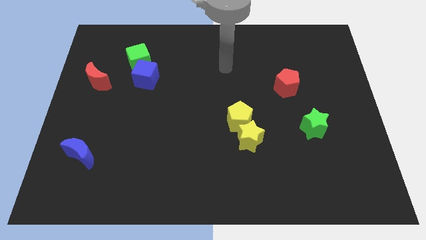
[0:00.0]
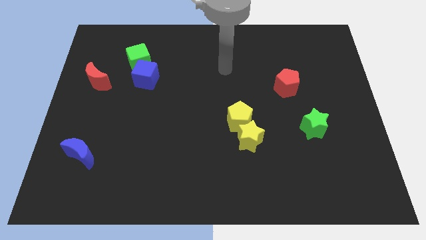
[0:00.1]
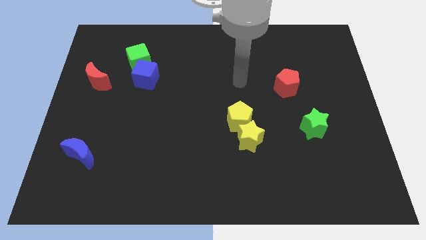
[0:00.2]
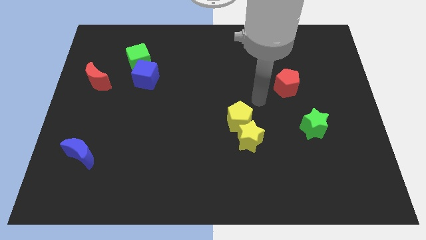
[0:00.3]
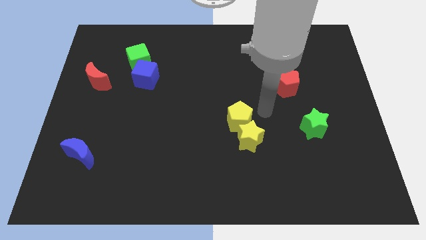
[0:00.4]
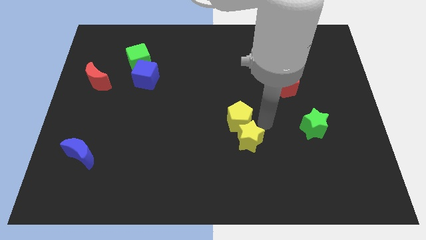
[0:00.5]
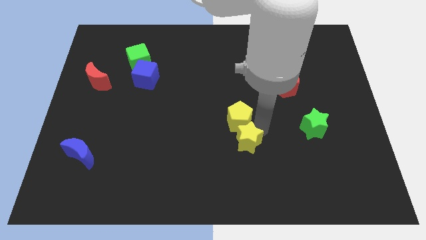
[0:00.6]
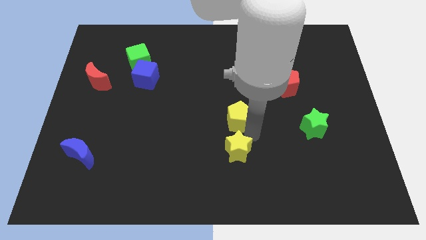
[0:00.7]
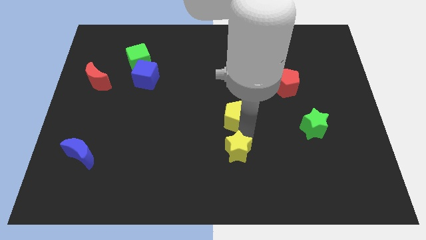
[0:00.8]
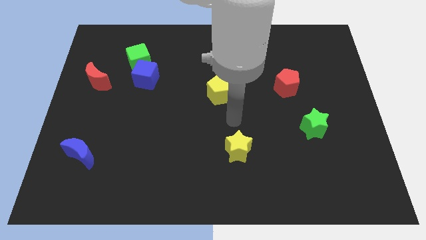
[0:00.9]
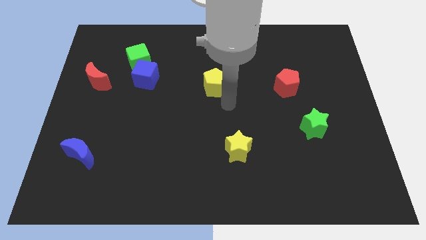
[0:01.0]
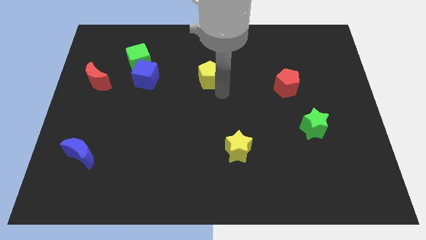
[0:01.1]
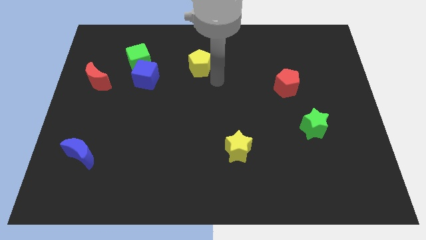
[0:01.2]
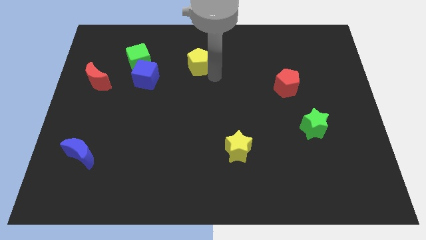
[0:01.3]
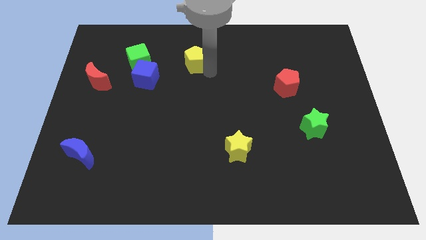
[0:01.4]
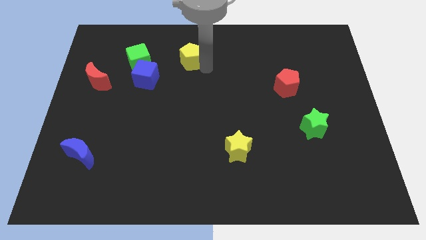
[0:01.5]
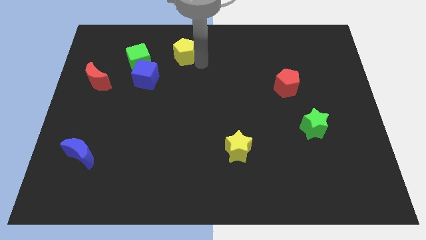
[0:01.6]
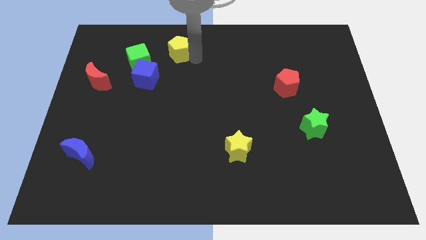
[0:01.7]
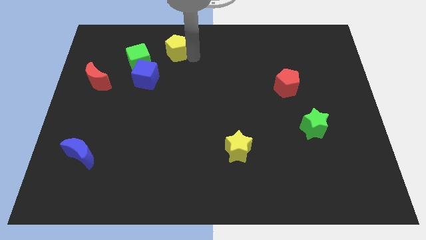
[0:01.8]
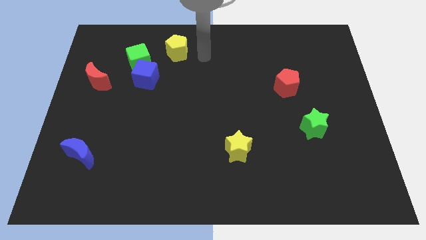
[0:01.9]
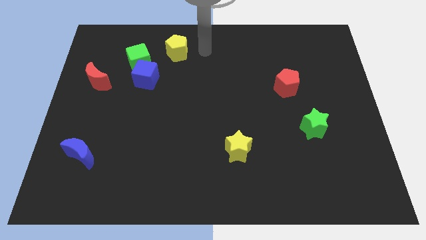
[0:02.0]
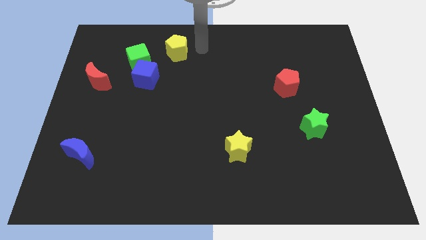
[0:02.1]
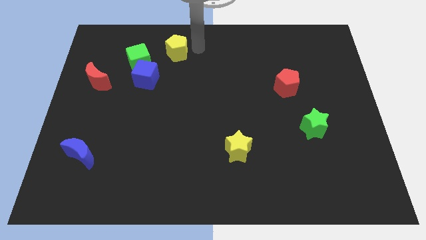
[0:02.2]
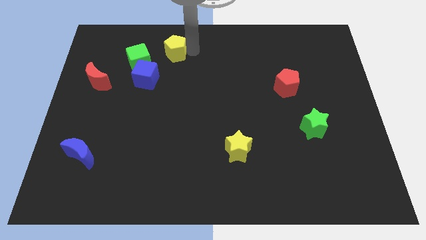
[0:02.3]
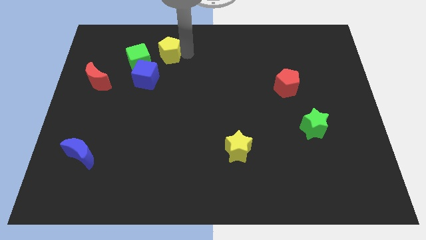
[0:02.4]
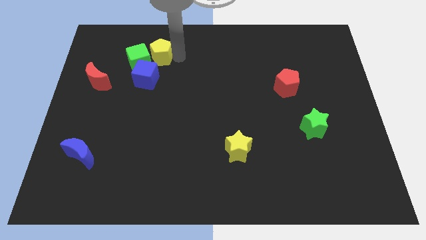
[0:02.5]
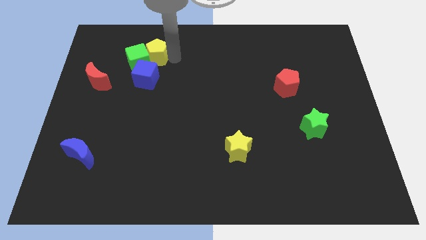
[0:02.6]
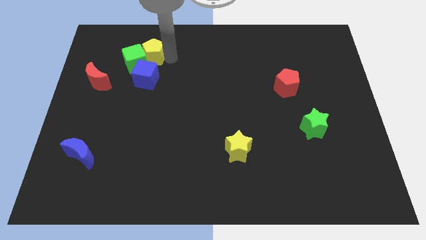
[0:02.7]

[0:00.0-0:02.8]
move the yellow pentagon to the green cube

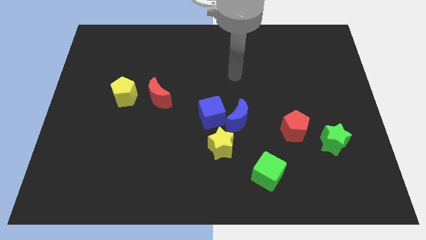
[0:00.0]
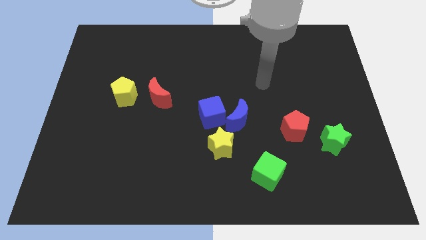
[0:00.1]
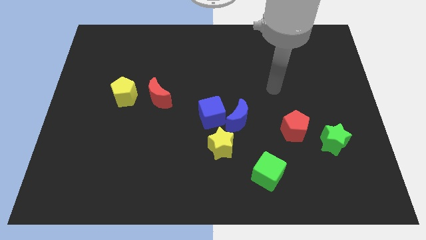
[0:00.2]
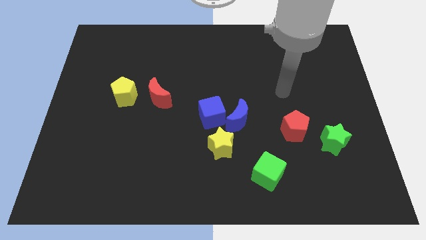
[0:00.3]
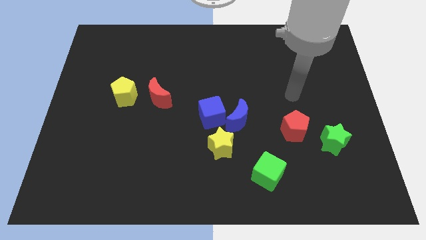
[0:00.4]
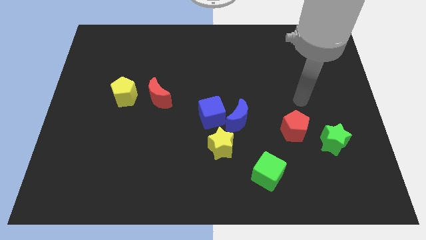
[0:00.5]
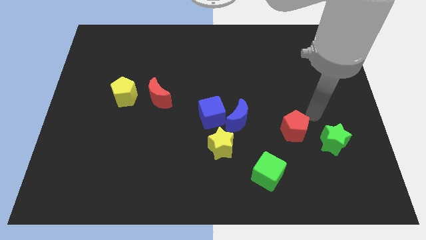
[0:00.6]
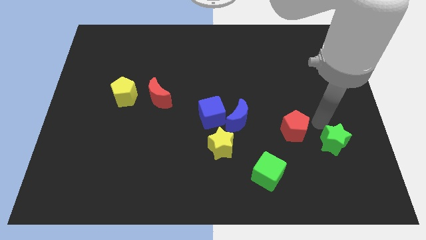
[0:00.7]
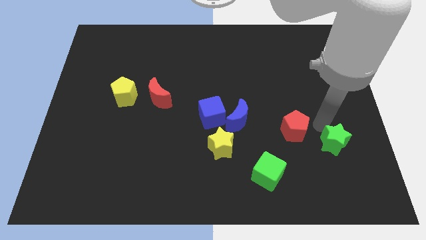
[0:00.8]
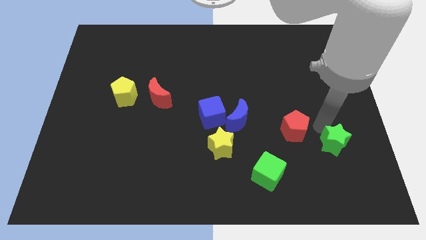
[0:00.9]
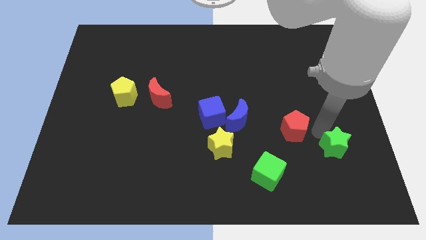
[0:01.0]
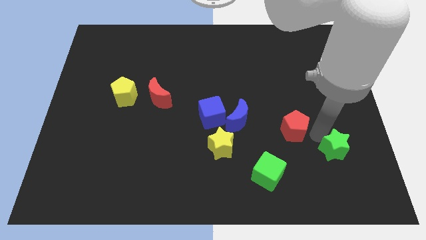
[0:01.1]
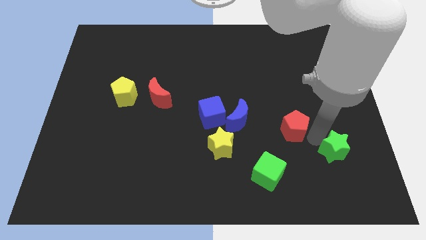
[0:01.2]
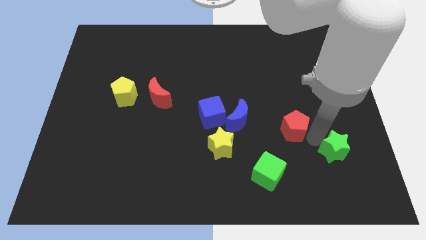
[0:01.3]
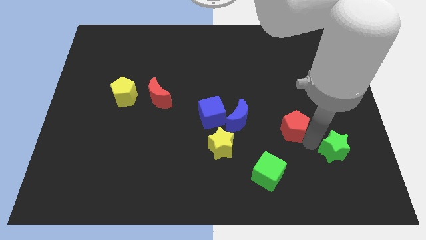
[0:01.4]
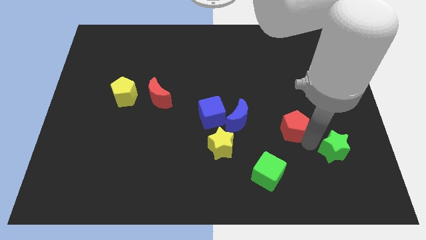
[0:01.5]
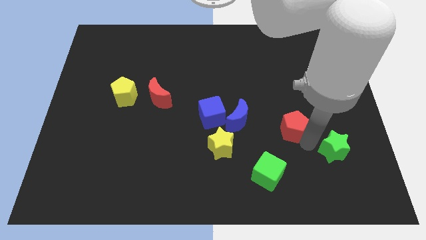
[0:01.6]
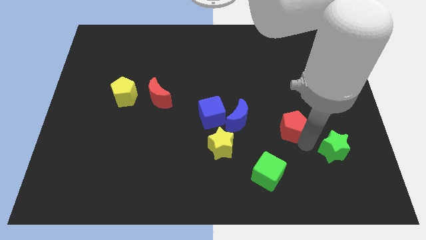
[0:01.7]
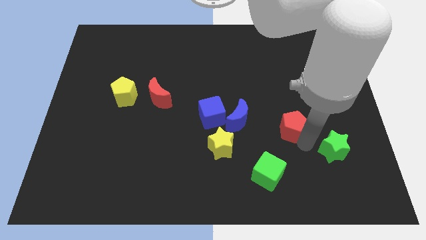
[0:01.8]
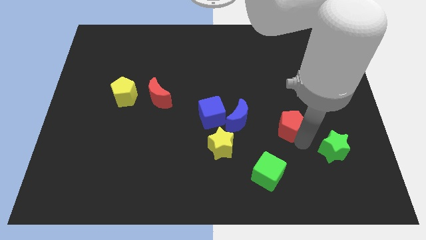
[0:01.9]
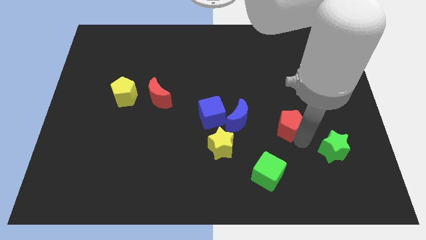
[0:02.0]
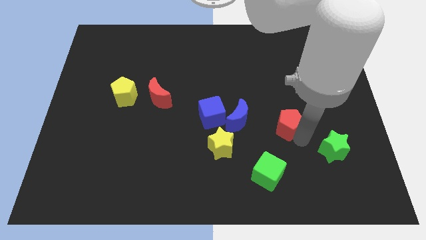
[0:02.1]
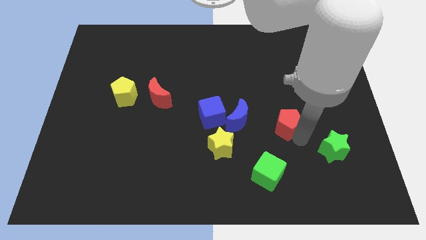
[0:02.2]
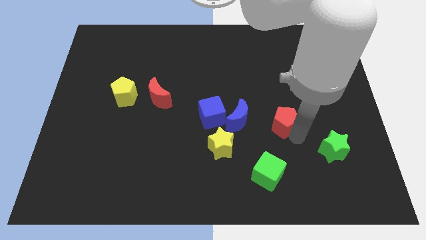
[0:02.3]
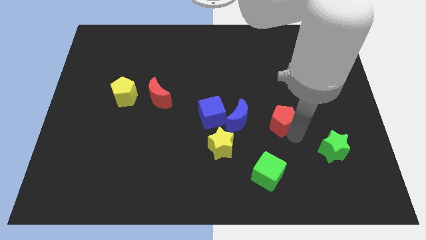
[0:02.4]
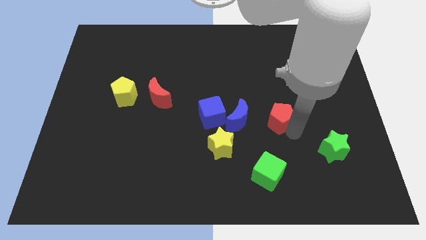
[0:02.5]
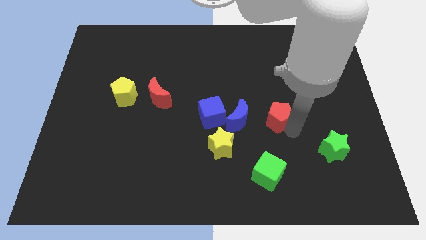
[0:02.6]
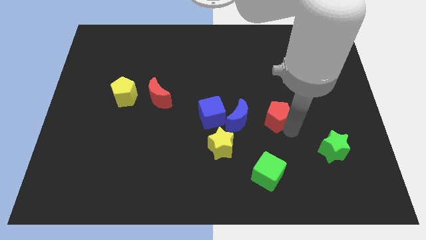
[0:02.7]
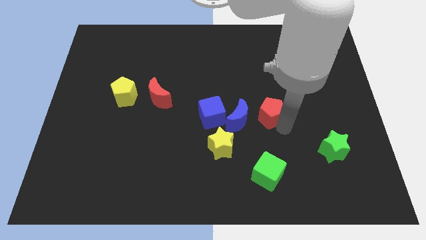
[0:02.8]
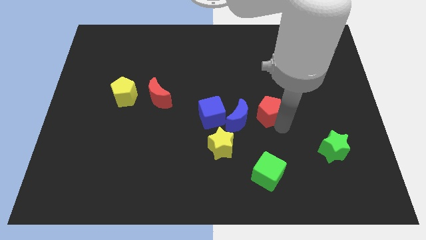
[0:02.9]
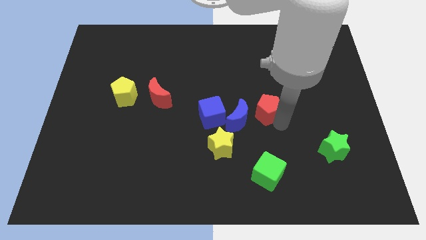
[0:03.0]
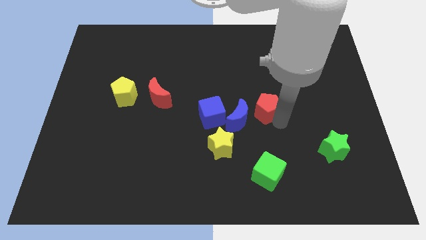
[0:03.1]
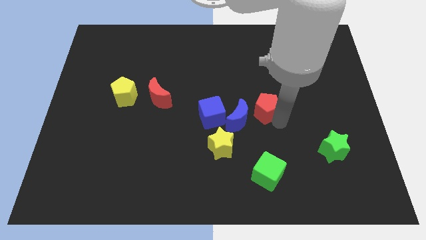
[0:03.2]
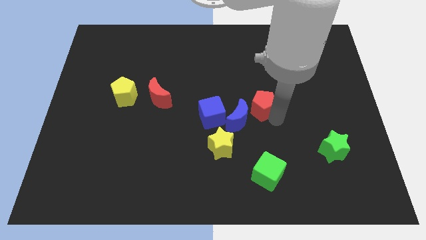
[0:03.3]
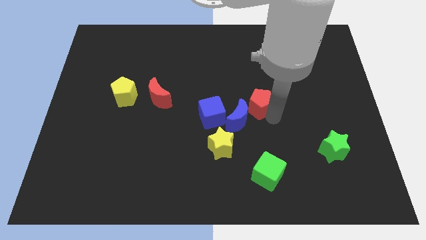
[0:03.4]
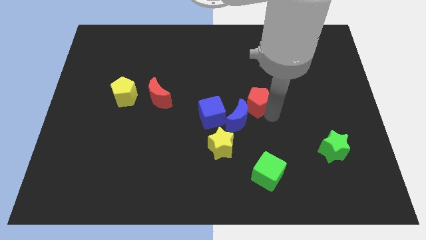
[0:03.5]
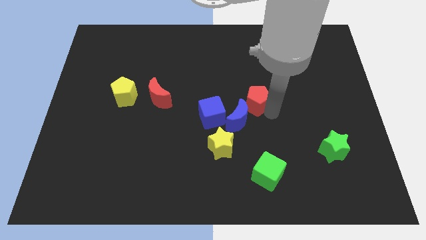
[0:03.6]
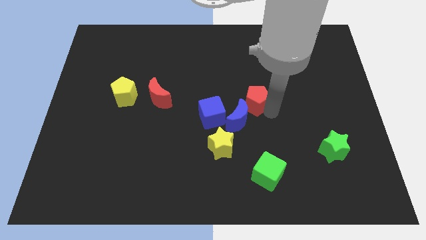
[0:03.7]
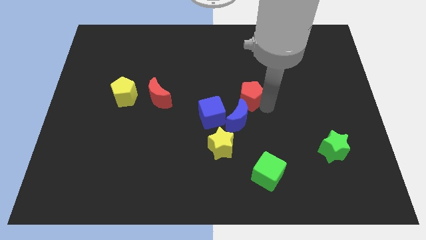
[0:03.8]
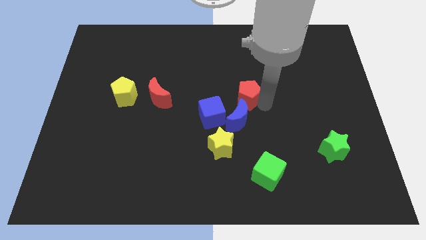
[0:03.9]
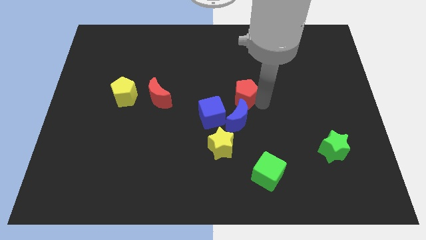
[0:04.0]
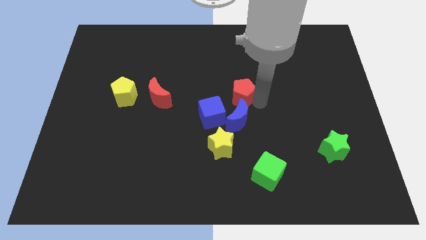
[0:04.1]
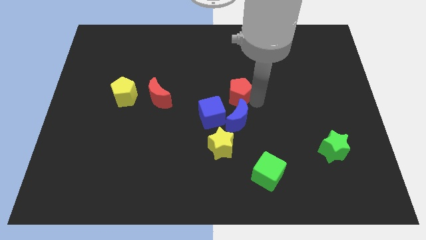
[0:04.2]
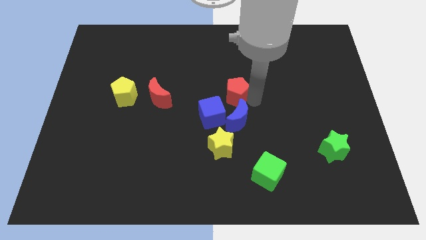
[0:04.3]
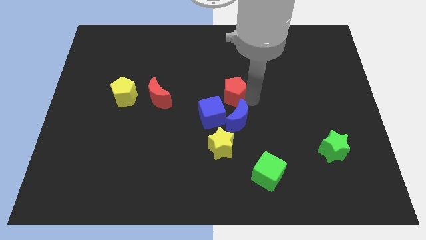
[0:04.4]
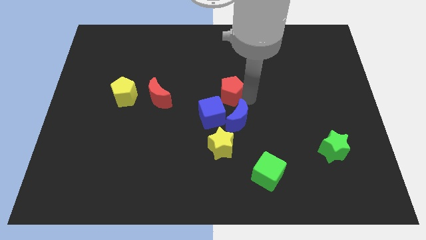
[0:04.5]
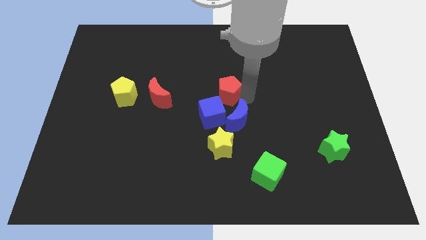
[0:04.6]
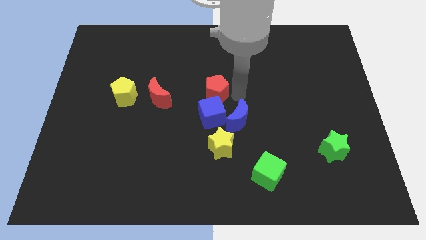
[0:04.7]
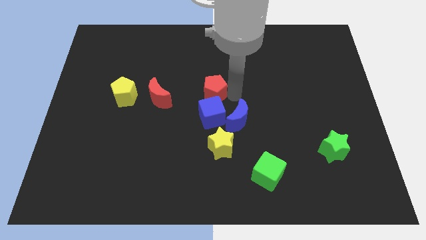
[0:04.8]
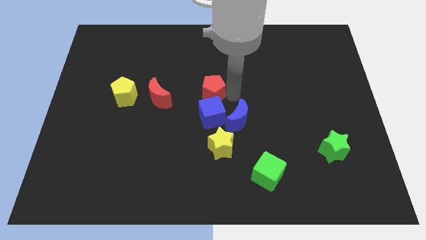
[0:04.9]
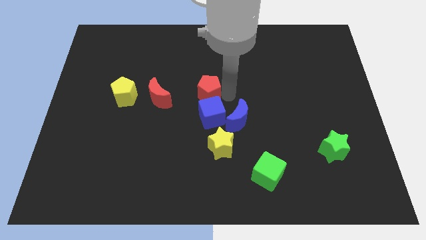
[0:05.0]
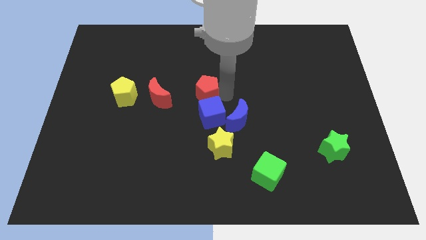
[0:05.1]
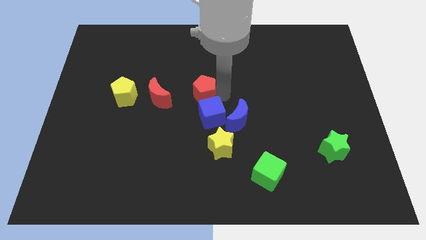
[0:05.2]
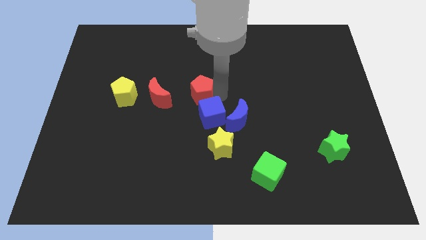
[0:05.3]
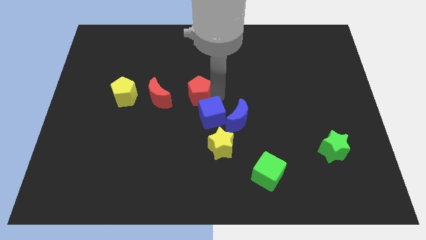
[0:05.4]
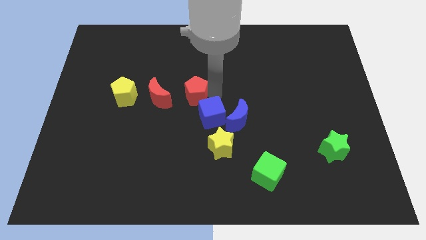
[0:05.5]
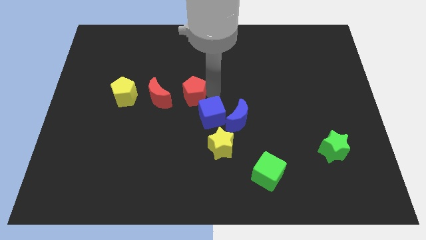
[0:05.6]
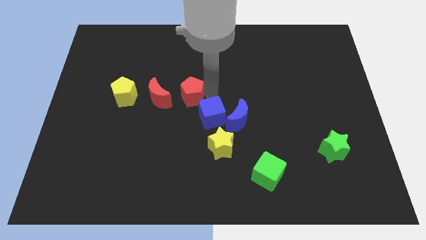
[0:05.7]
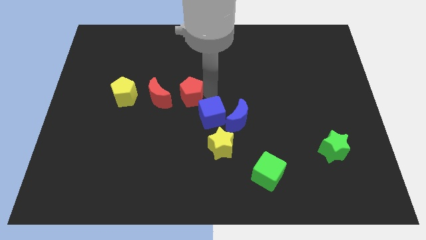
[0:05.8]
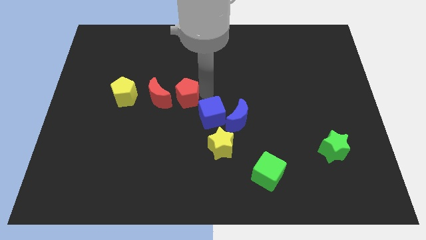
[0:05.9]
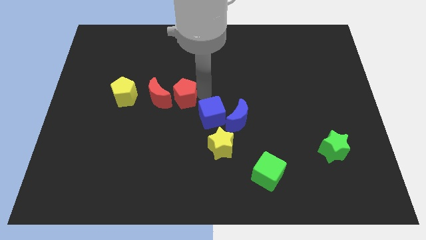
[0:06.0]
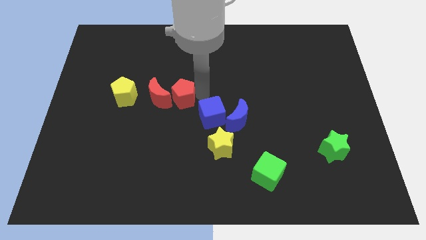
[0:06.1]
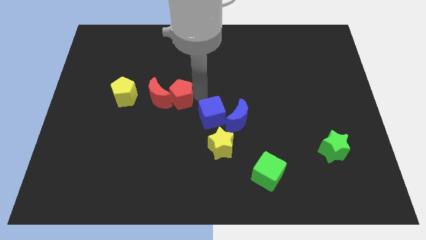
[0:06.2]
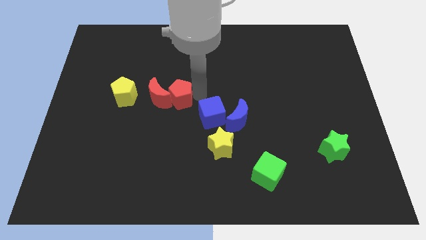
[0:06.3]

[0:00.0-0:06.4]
slide the red pentagon to the red moon
